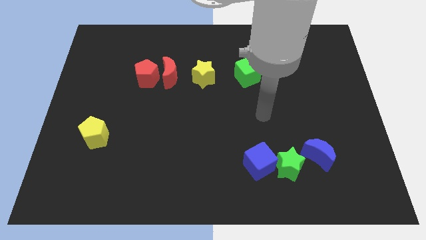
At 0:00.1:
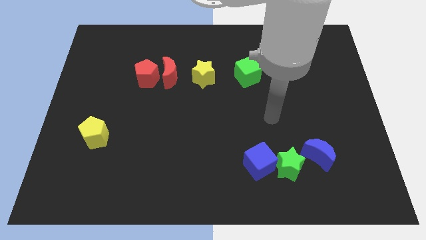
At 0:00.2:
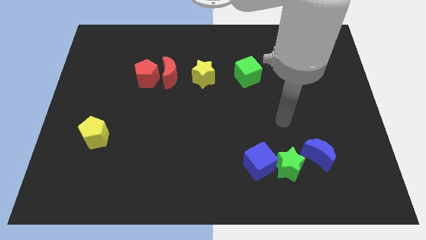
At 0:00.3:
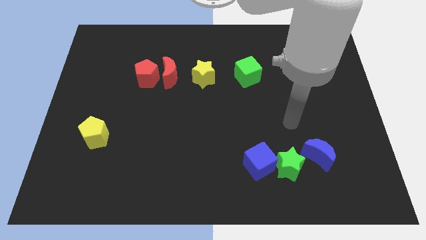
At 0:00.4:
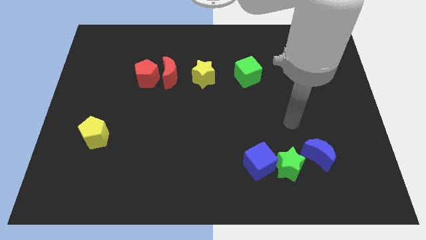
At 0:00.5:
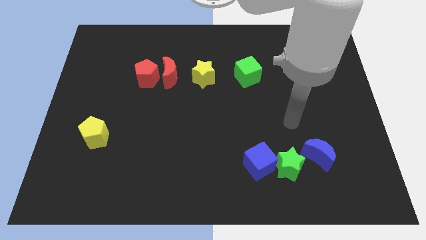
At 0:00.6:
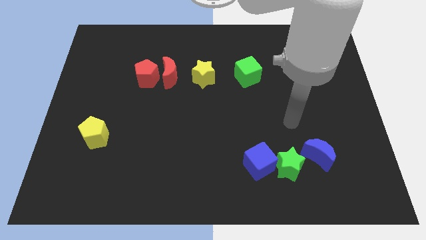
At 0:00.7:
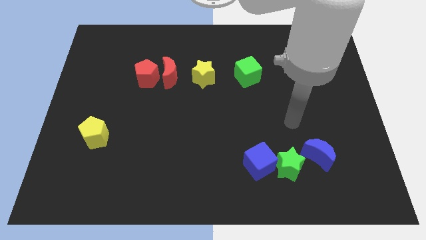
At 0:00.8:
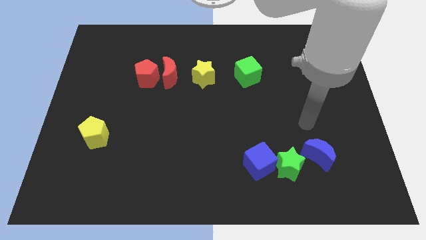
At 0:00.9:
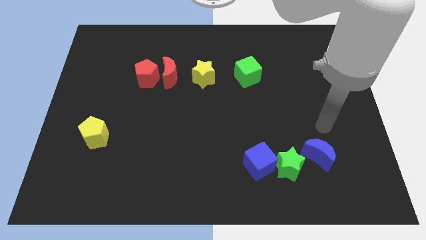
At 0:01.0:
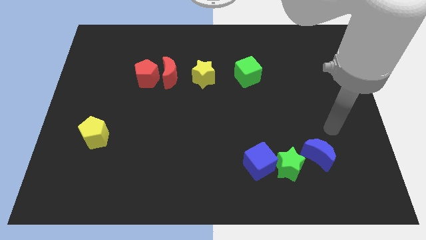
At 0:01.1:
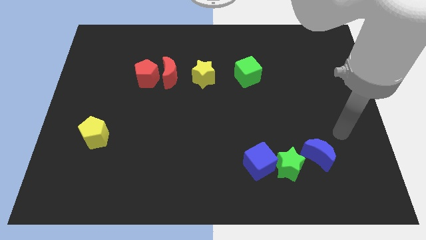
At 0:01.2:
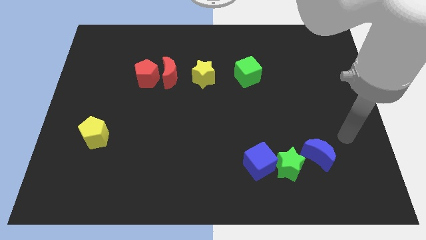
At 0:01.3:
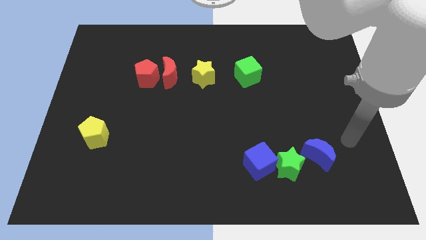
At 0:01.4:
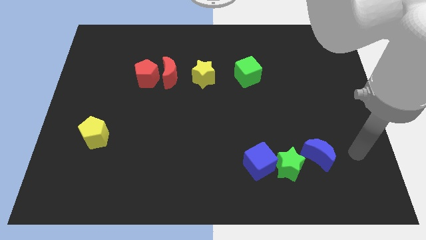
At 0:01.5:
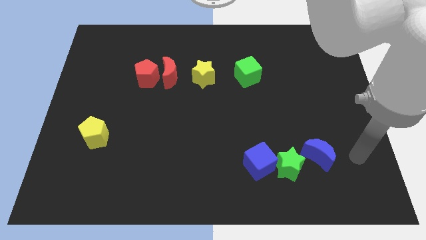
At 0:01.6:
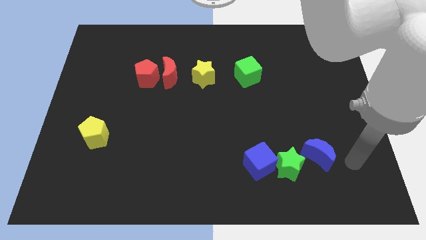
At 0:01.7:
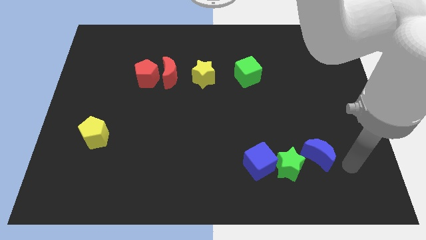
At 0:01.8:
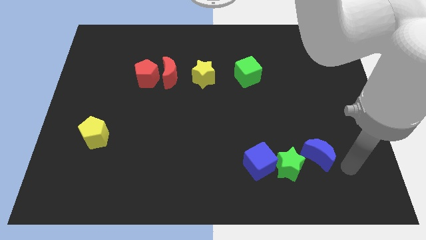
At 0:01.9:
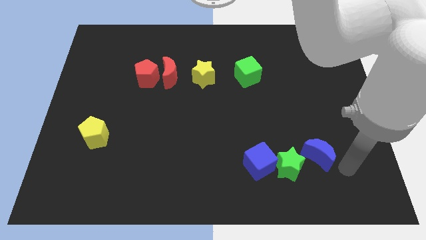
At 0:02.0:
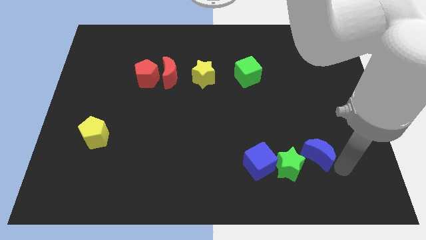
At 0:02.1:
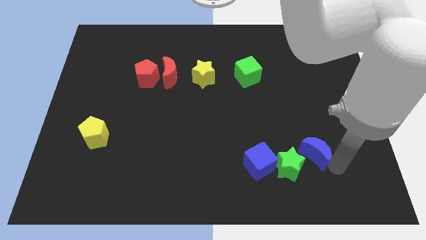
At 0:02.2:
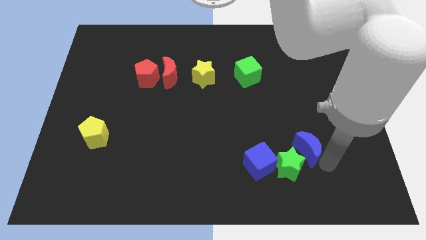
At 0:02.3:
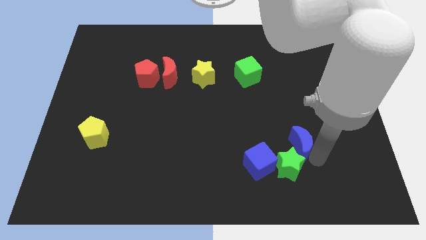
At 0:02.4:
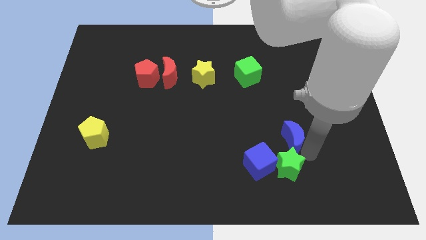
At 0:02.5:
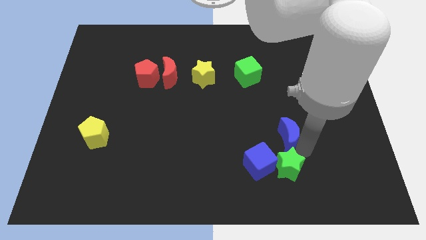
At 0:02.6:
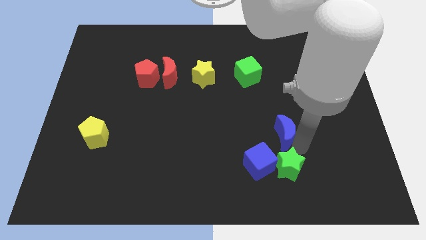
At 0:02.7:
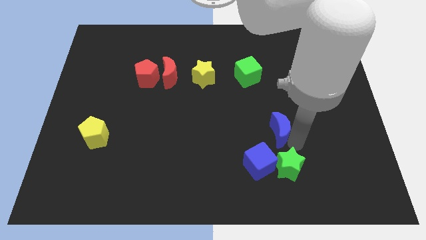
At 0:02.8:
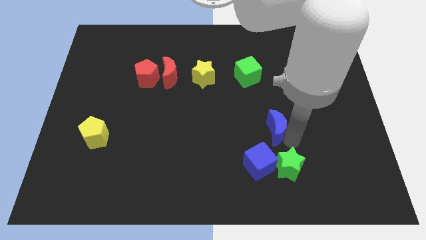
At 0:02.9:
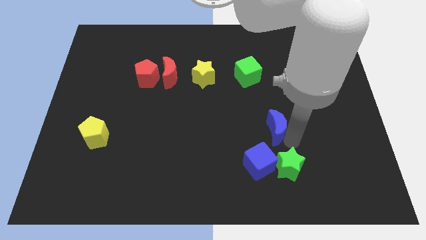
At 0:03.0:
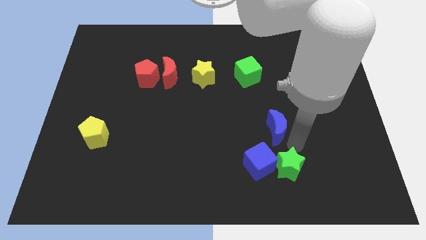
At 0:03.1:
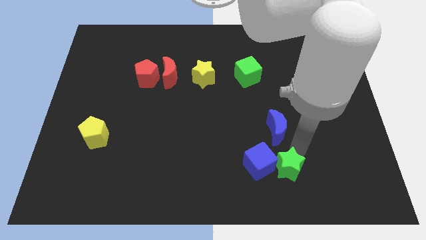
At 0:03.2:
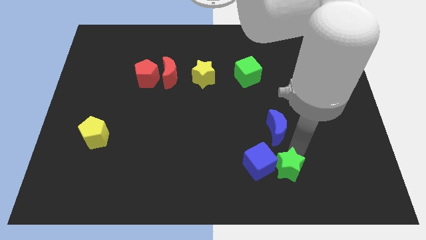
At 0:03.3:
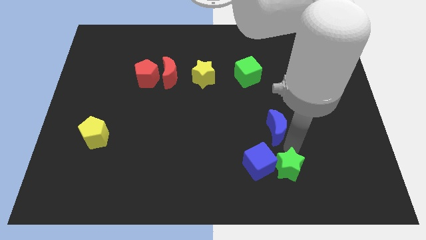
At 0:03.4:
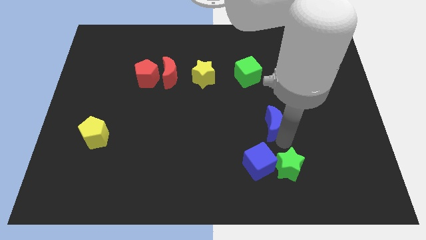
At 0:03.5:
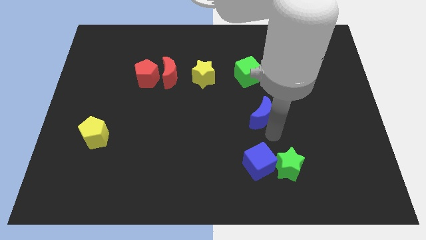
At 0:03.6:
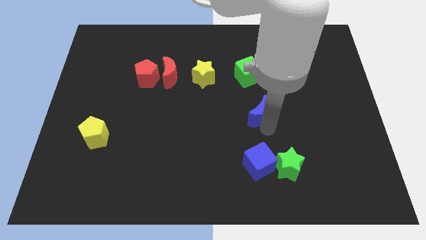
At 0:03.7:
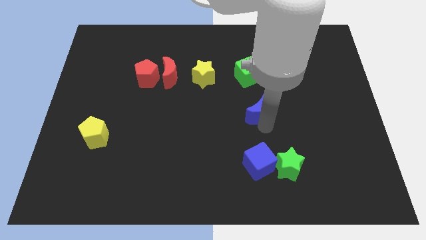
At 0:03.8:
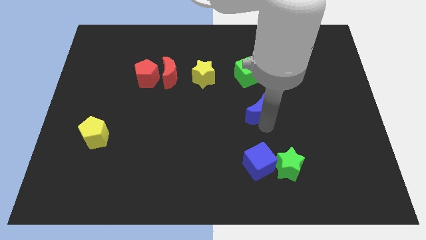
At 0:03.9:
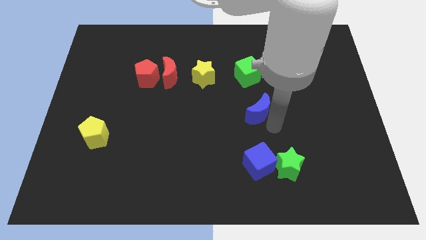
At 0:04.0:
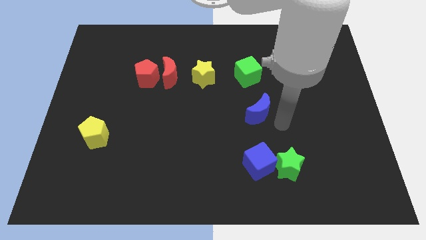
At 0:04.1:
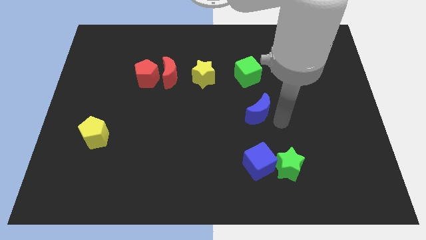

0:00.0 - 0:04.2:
place the blue moon between the blue cube and green cube

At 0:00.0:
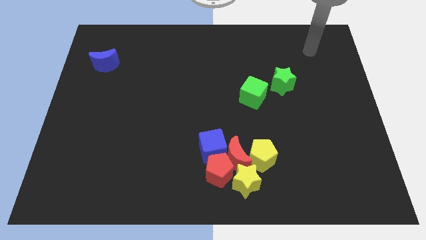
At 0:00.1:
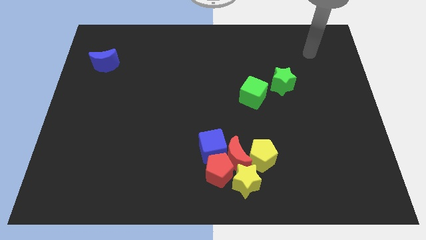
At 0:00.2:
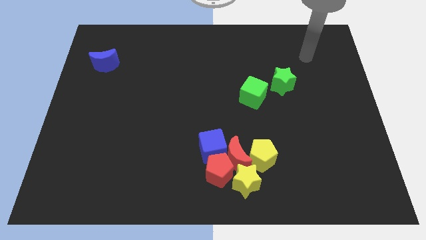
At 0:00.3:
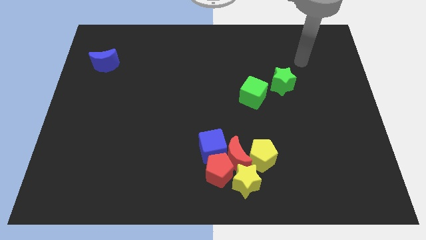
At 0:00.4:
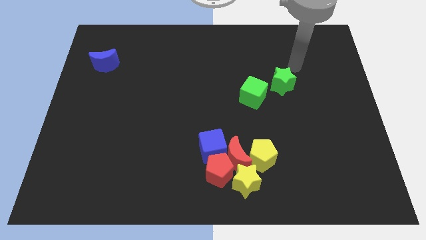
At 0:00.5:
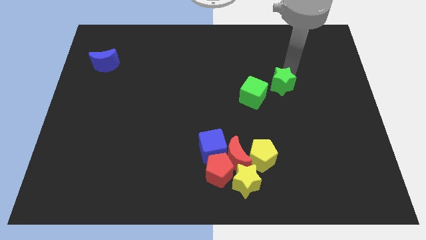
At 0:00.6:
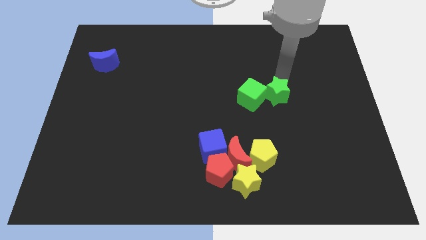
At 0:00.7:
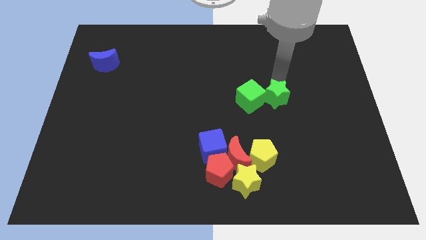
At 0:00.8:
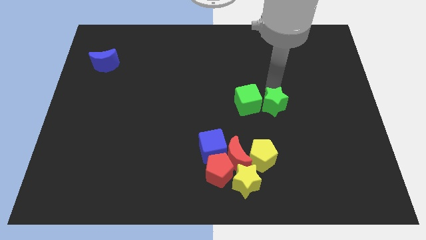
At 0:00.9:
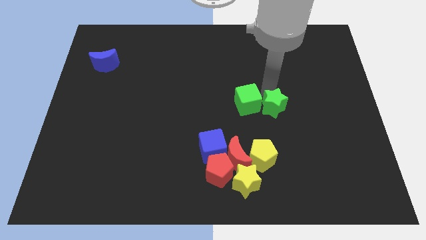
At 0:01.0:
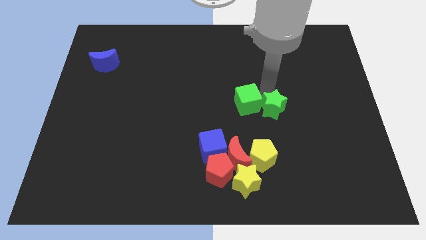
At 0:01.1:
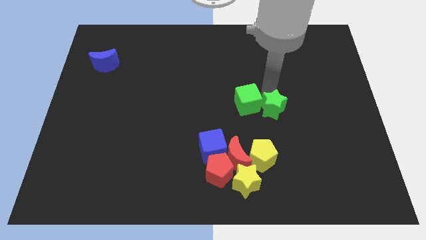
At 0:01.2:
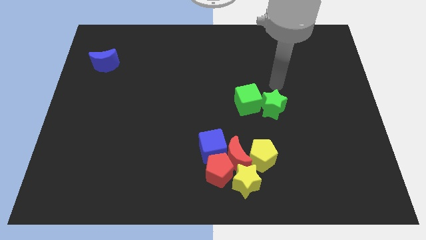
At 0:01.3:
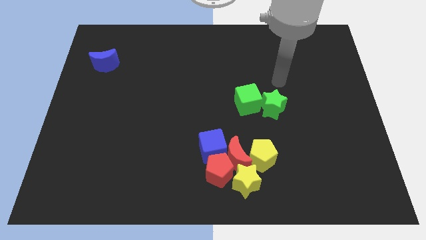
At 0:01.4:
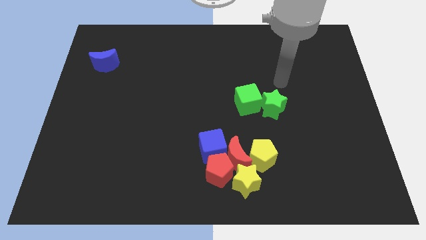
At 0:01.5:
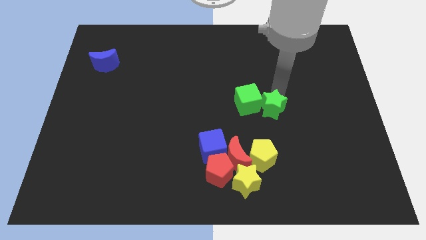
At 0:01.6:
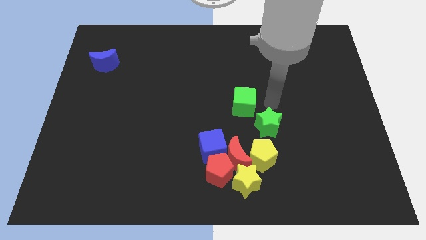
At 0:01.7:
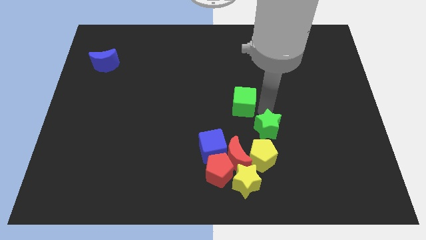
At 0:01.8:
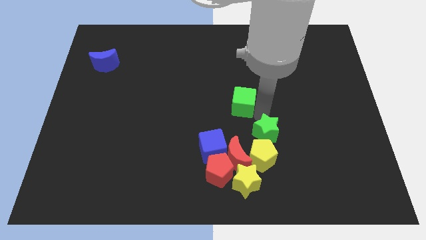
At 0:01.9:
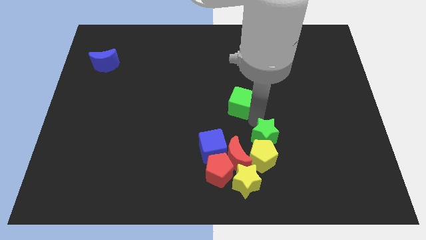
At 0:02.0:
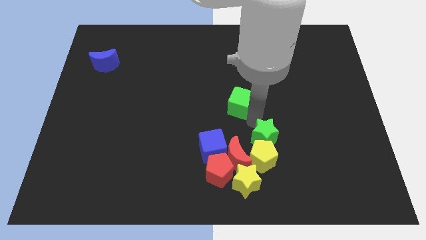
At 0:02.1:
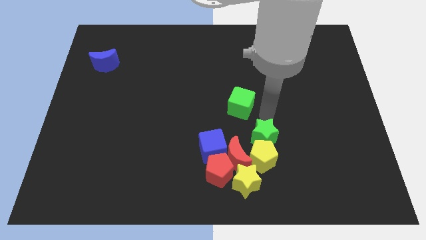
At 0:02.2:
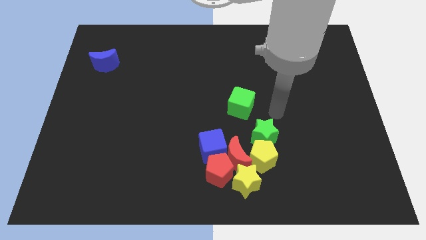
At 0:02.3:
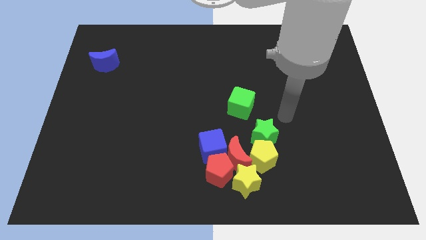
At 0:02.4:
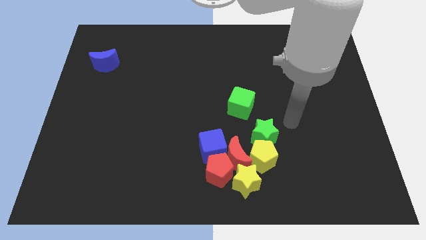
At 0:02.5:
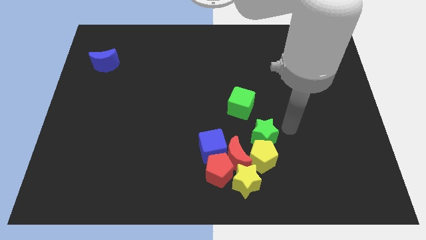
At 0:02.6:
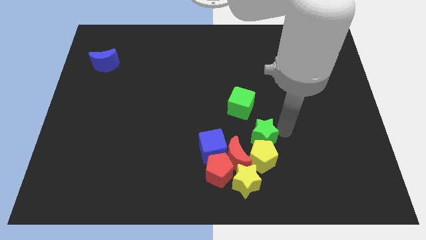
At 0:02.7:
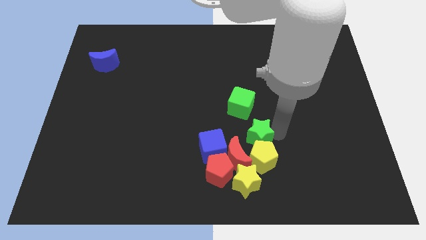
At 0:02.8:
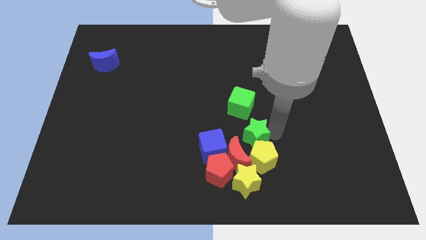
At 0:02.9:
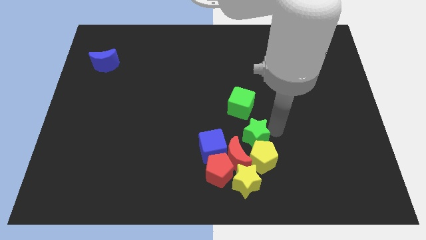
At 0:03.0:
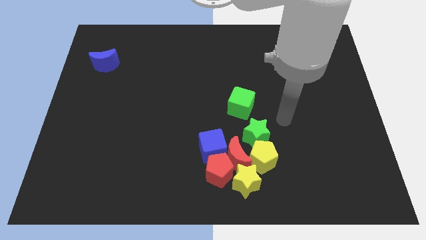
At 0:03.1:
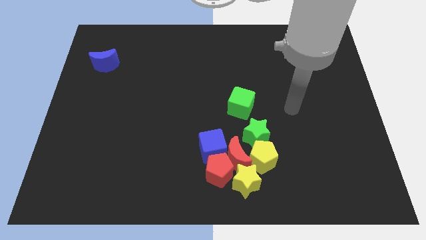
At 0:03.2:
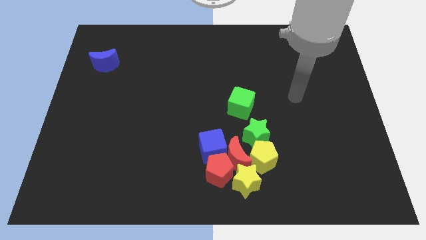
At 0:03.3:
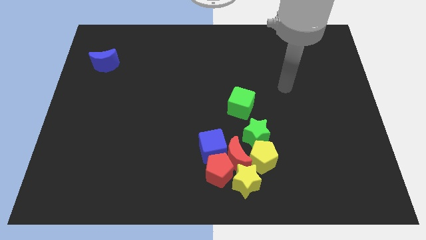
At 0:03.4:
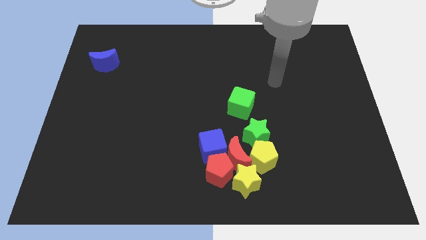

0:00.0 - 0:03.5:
move the green star above the yellow pentagon

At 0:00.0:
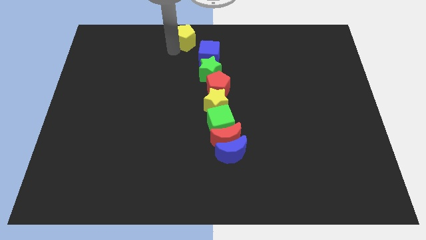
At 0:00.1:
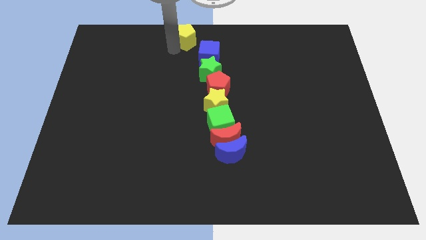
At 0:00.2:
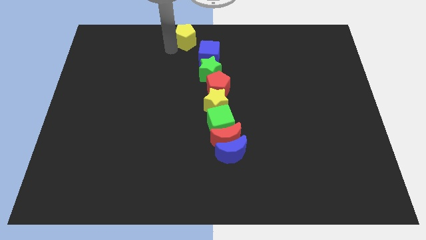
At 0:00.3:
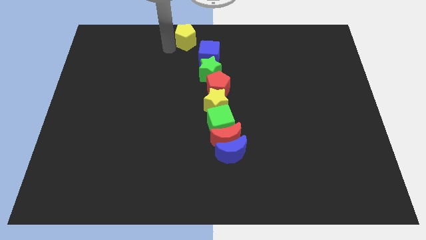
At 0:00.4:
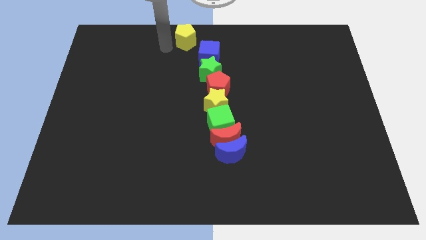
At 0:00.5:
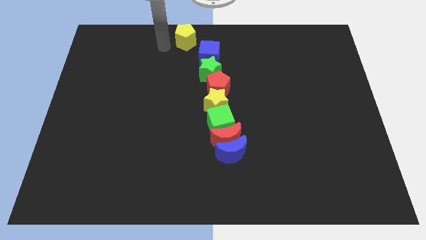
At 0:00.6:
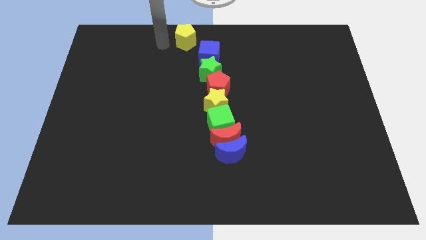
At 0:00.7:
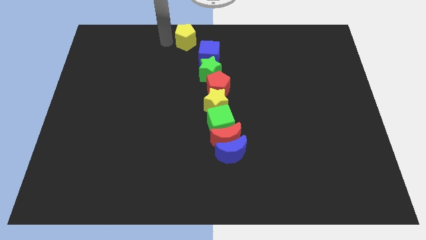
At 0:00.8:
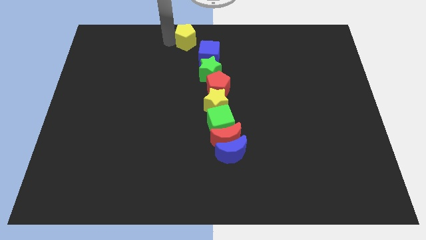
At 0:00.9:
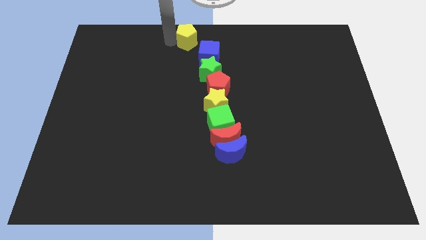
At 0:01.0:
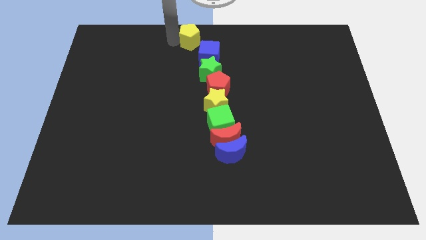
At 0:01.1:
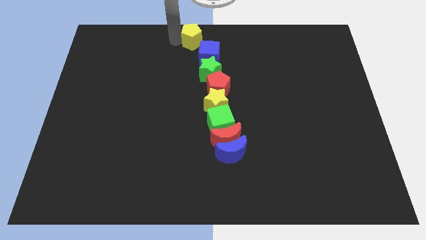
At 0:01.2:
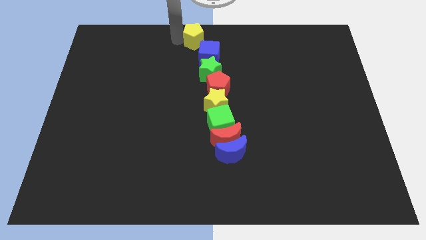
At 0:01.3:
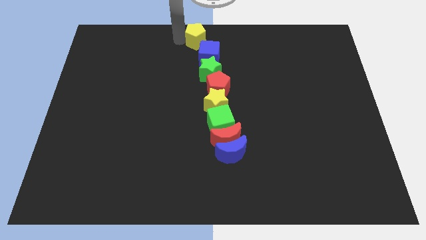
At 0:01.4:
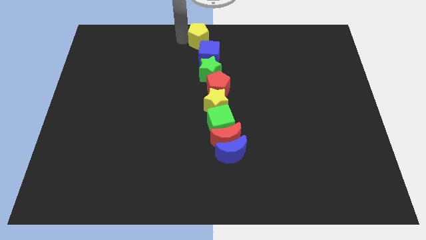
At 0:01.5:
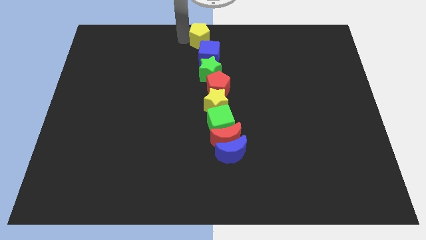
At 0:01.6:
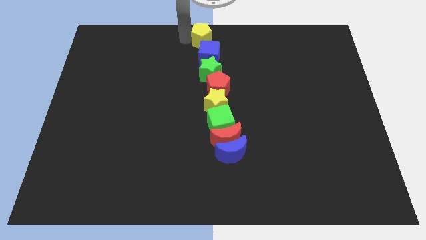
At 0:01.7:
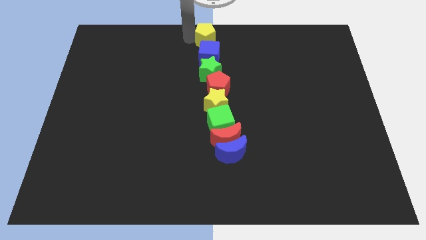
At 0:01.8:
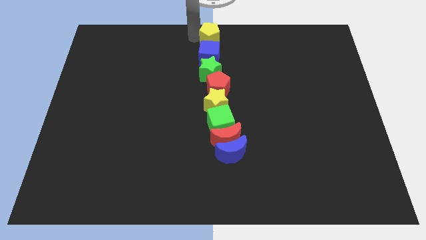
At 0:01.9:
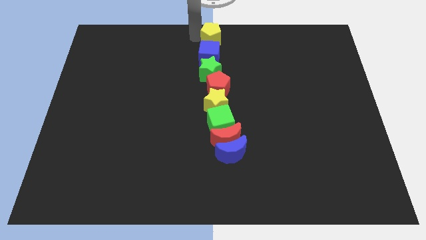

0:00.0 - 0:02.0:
place the yellow pentagon above the blue cube
